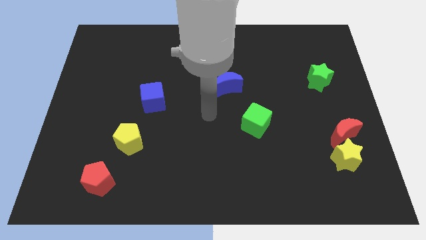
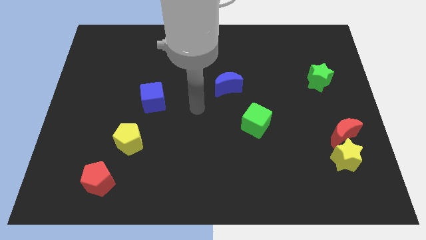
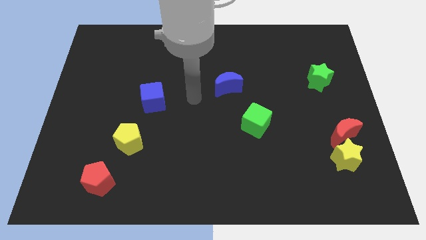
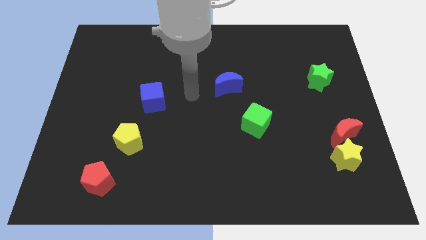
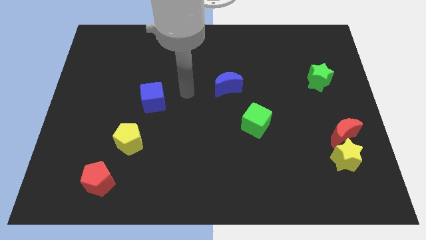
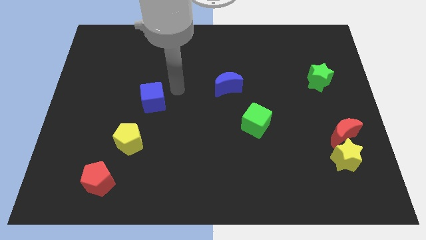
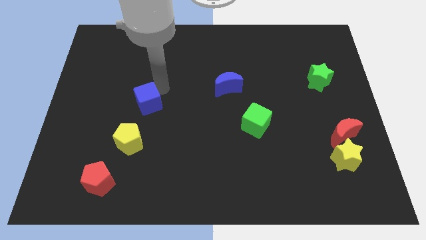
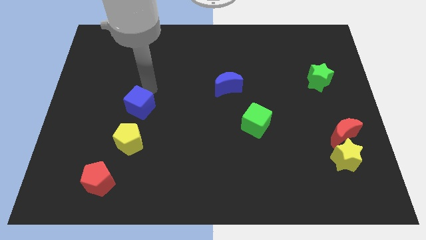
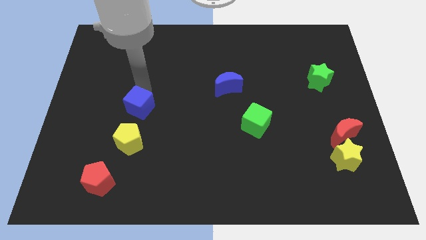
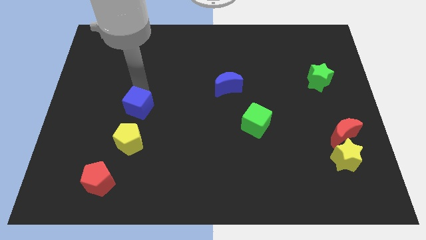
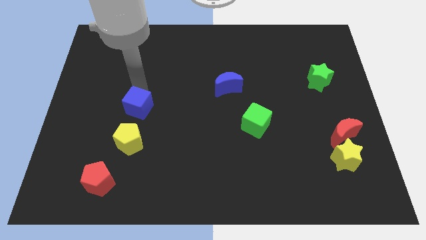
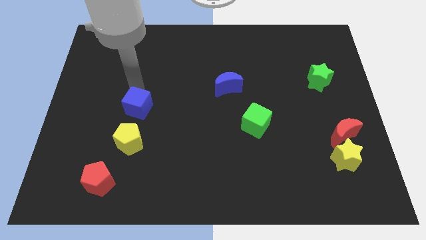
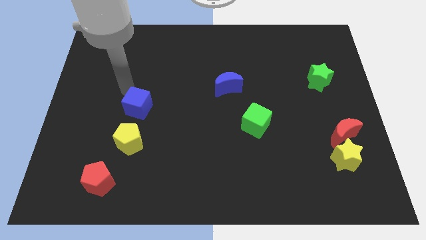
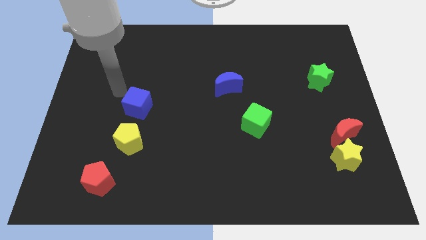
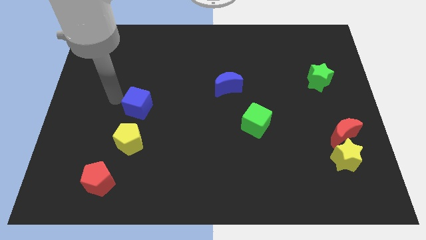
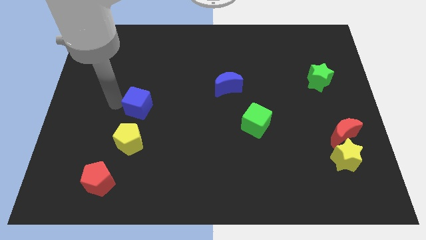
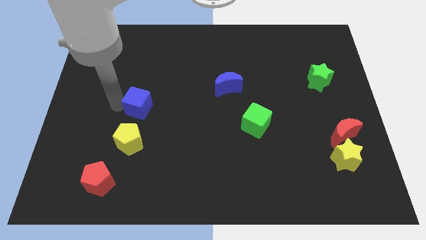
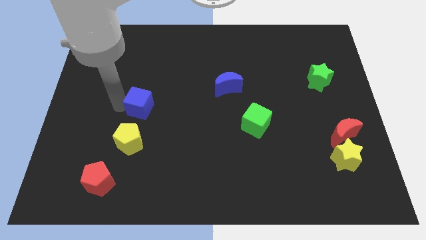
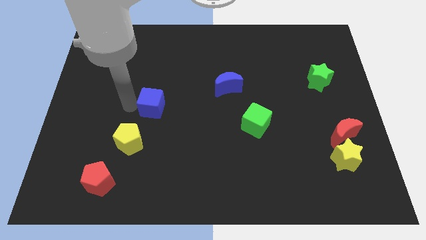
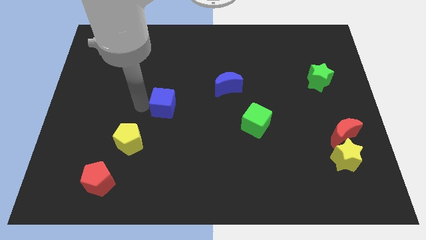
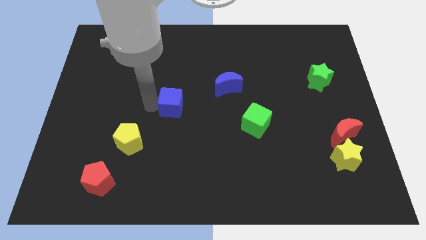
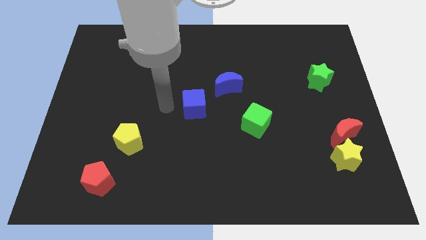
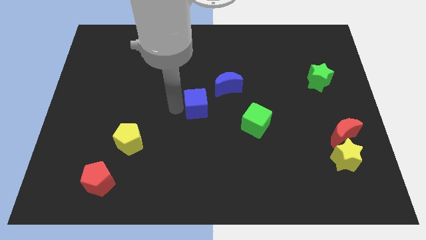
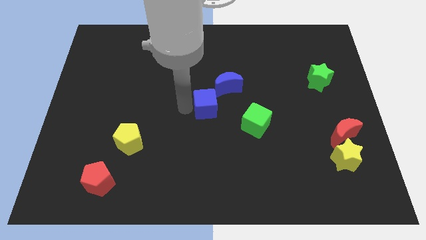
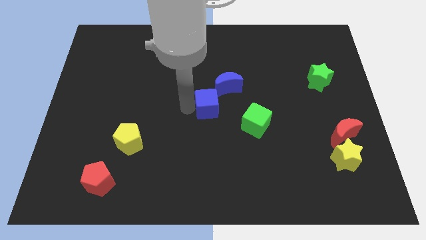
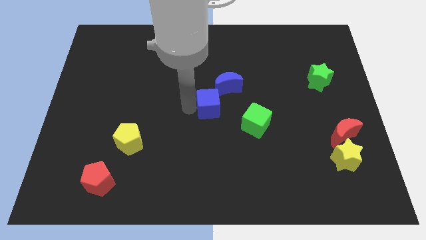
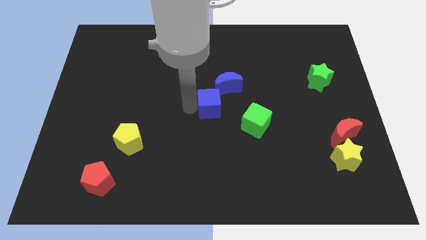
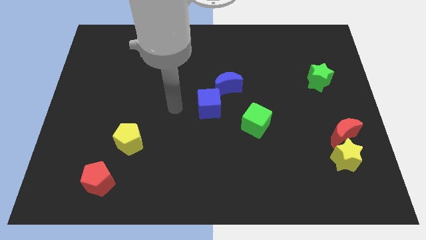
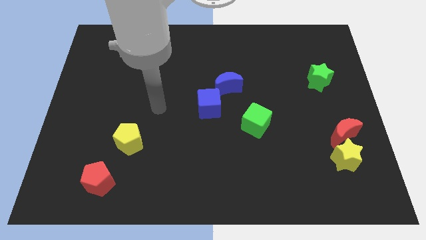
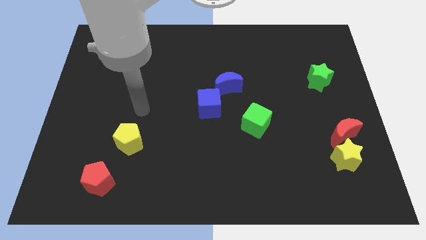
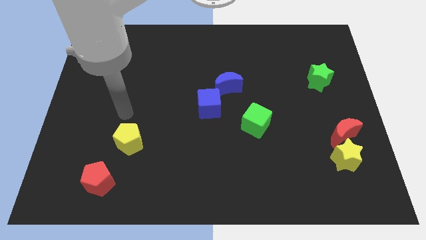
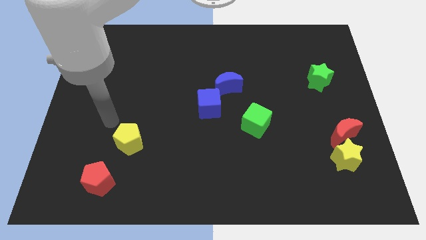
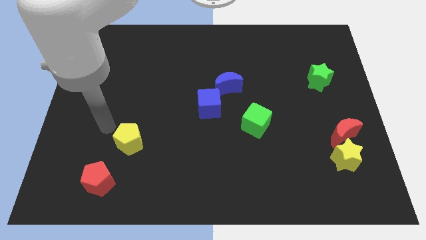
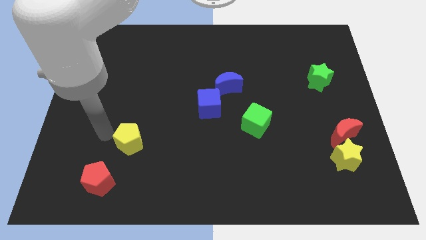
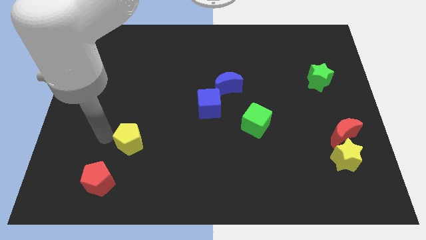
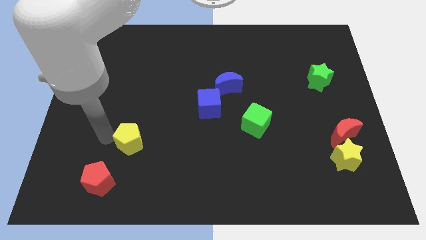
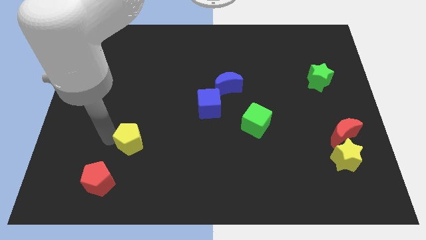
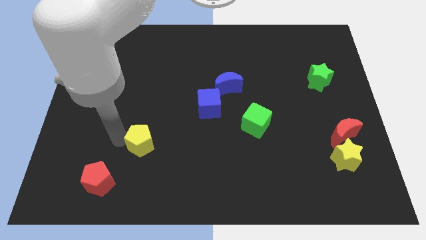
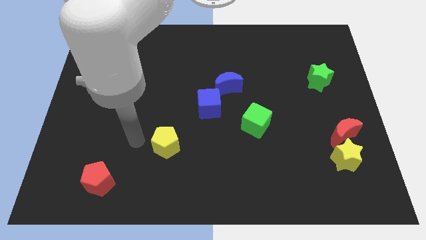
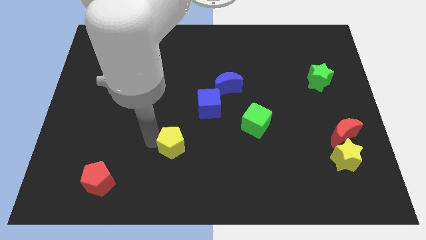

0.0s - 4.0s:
place the blue cube below the blue moon

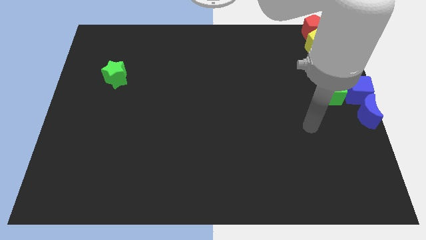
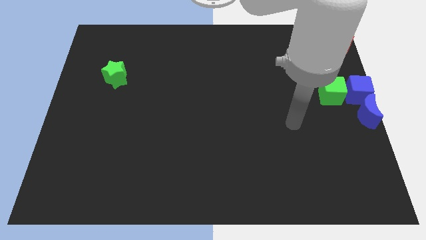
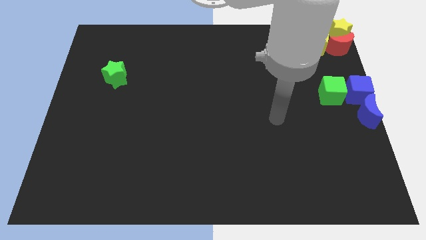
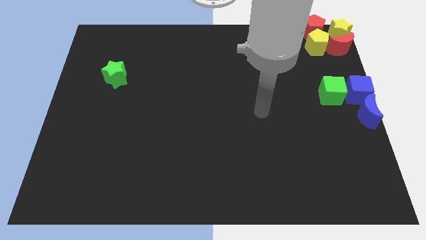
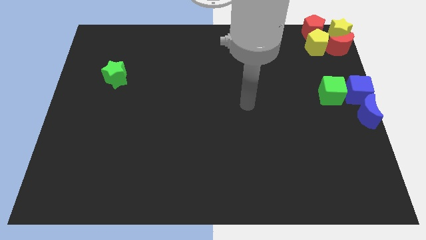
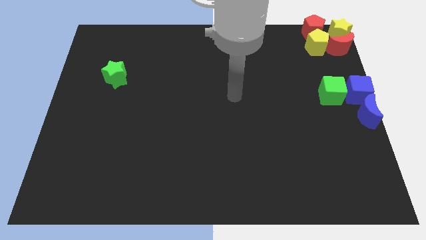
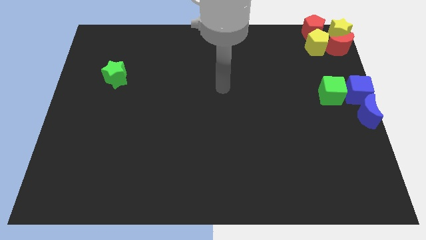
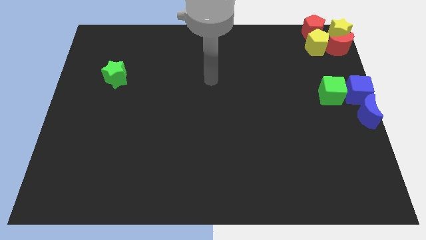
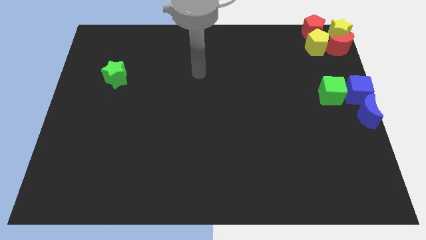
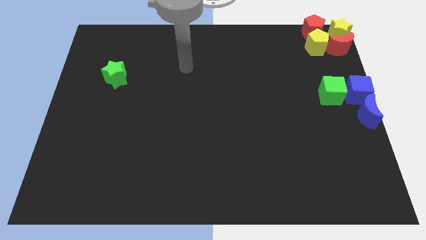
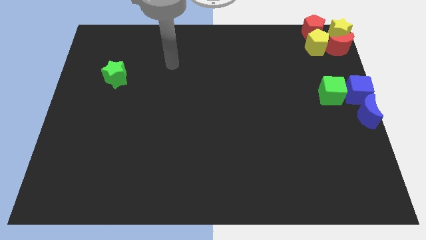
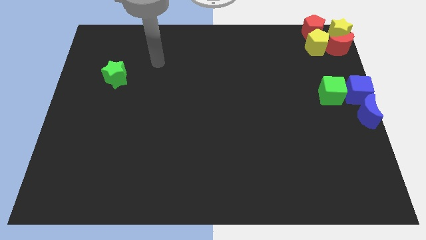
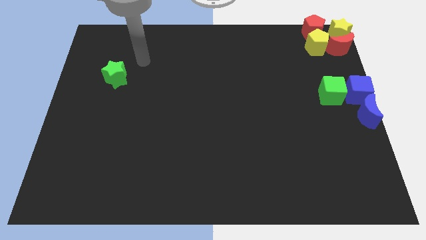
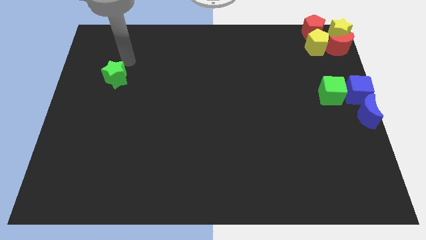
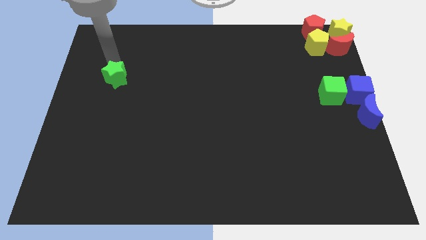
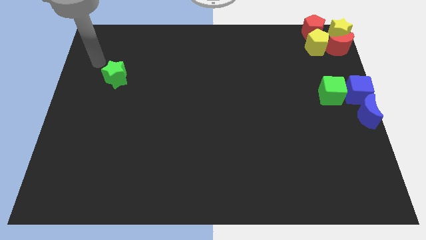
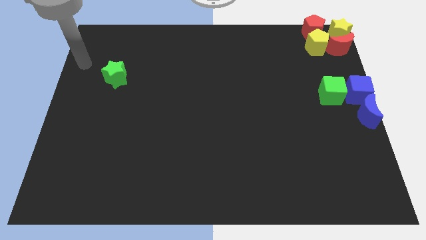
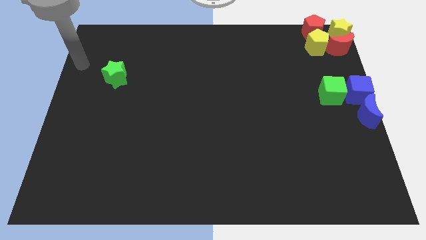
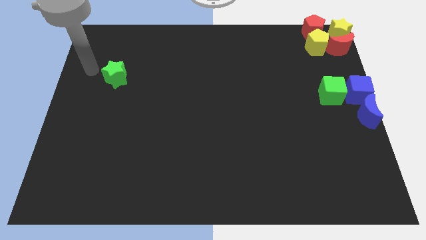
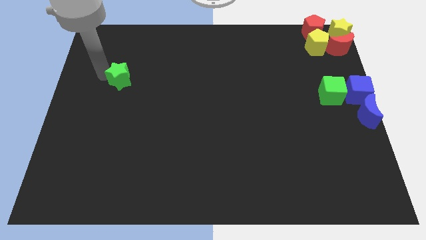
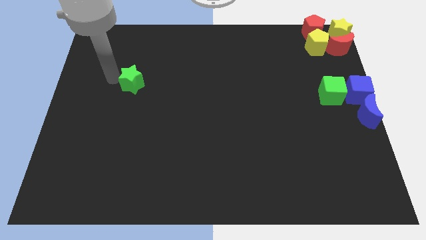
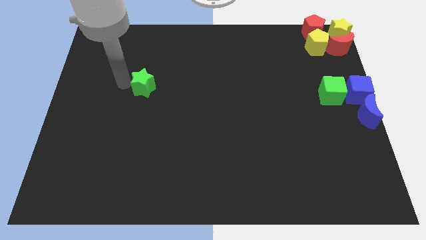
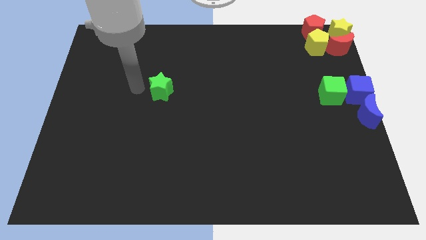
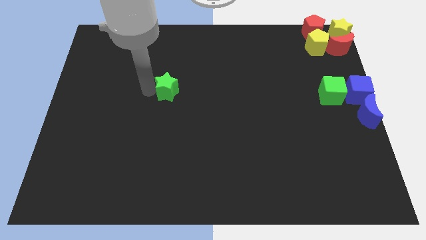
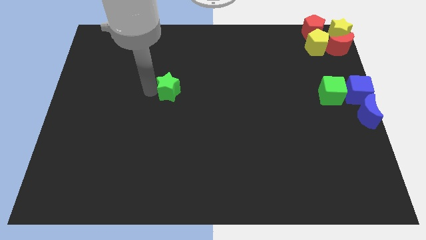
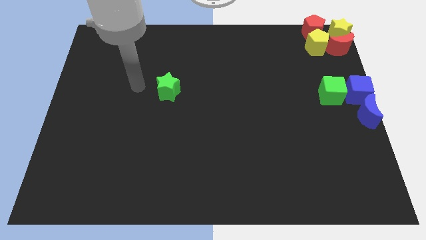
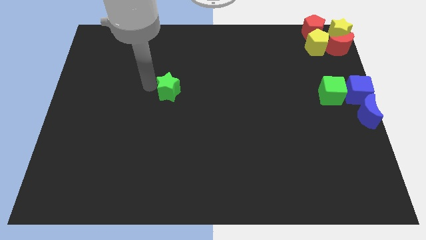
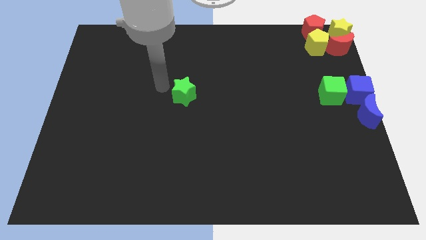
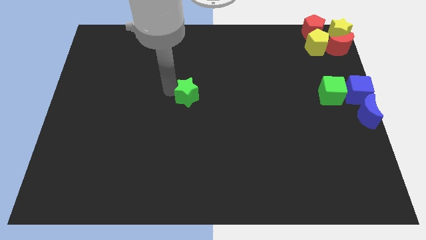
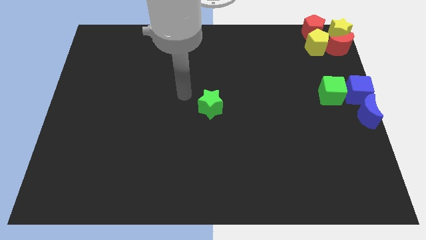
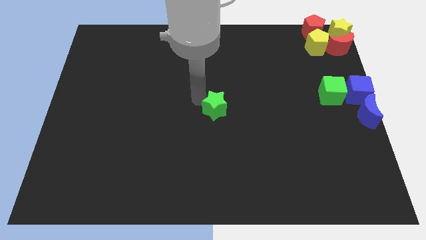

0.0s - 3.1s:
place the green star at the center of the board

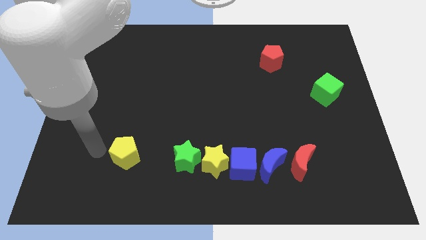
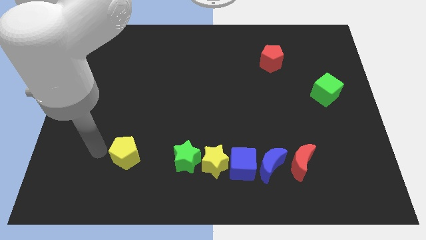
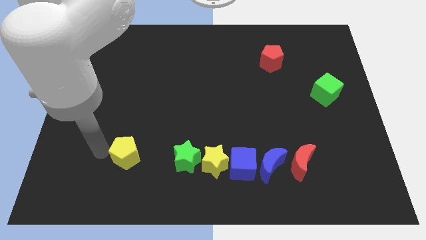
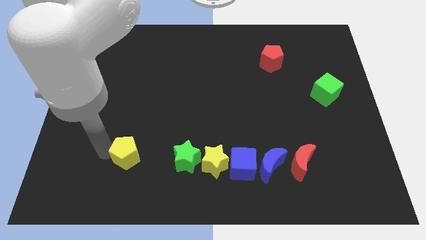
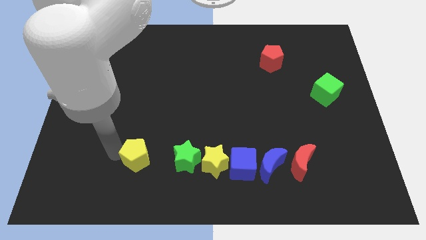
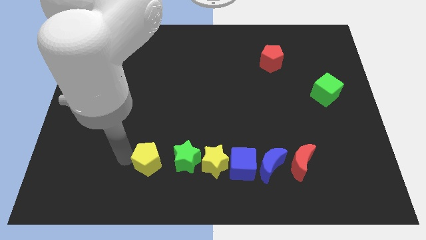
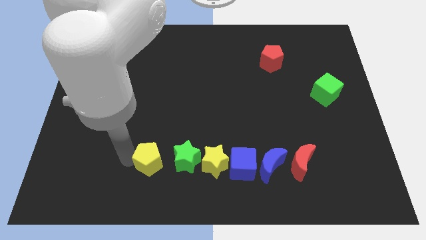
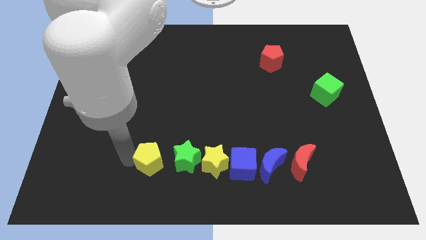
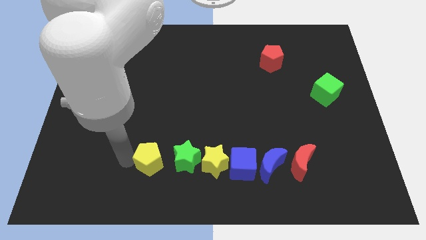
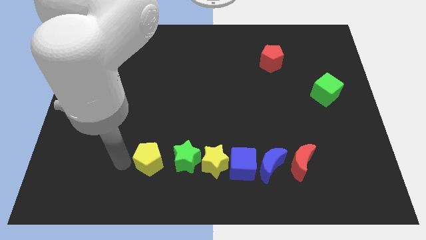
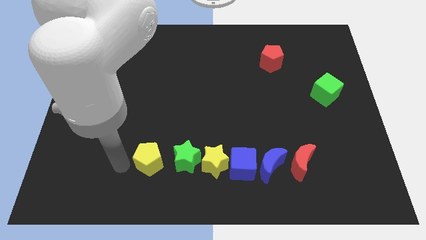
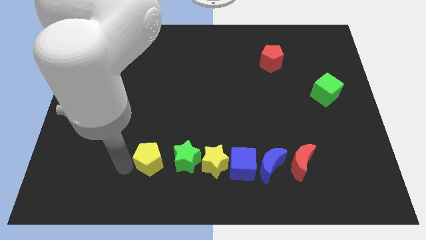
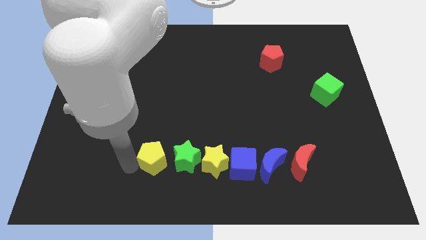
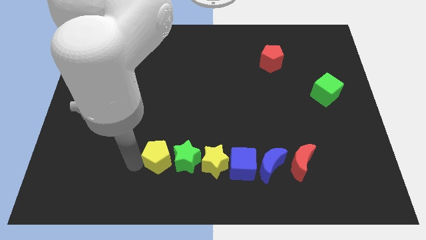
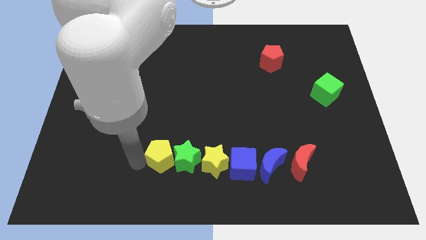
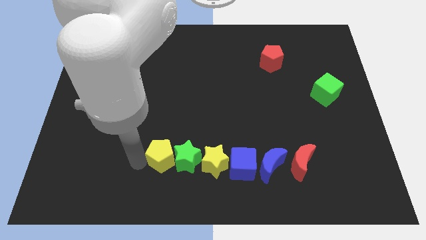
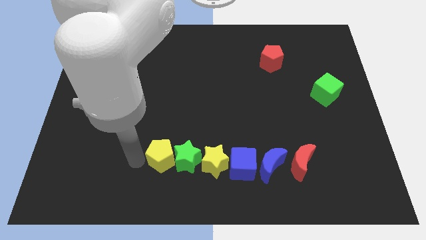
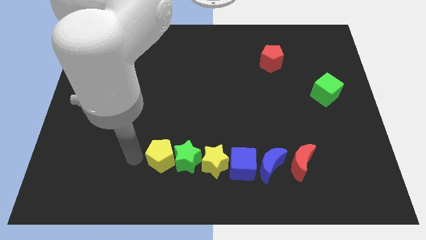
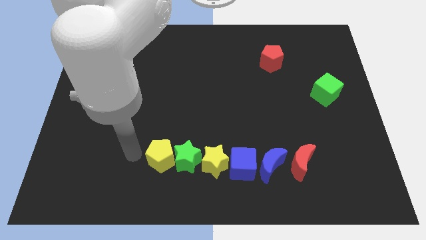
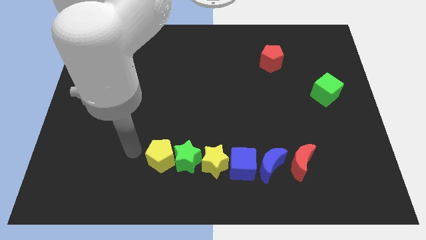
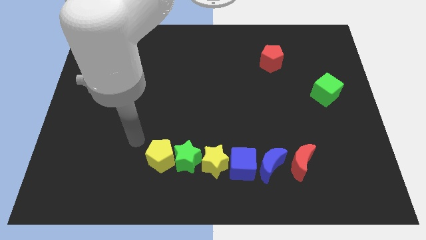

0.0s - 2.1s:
push the yellow pentagon left to the green star on the board
